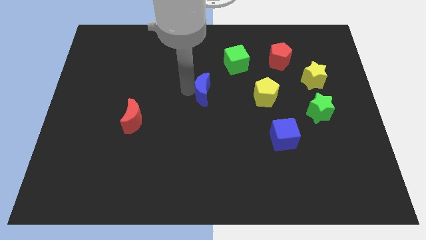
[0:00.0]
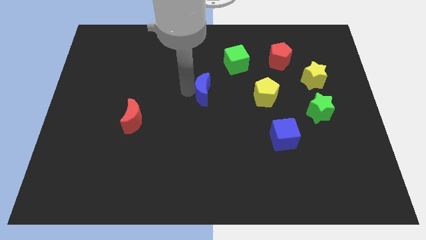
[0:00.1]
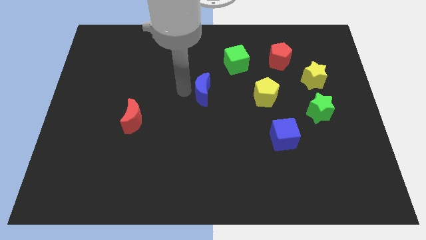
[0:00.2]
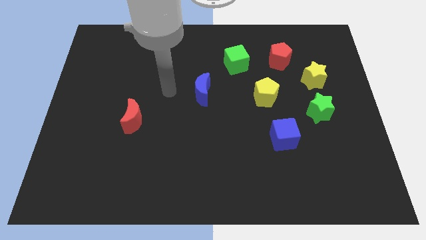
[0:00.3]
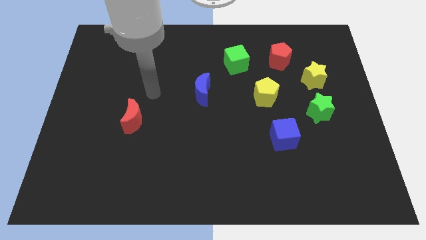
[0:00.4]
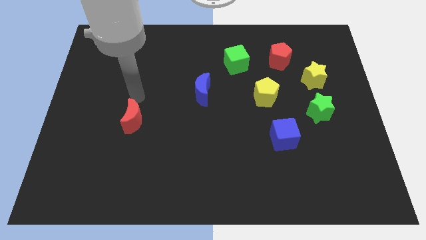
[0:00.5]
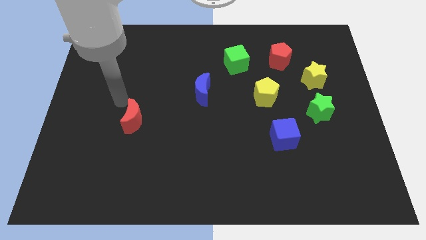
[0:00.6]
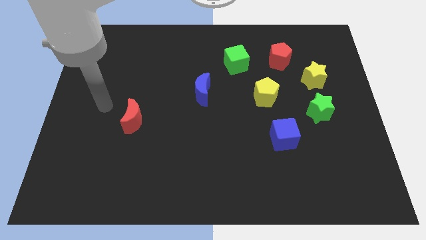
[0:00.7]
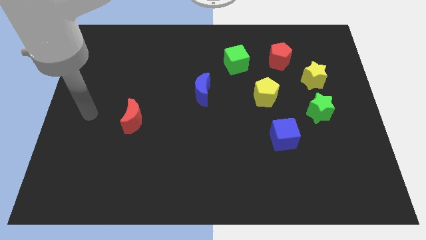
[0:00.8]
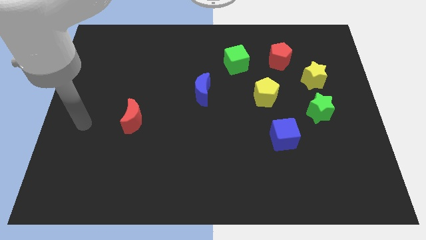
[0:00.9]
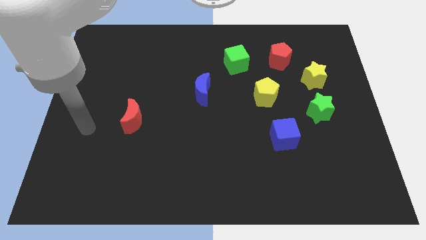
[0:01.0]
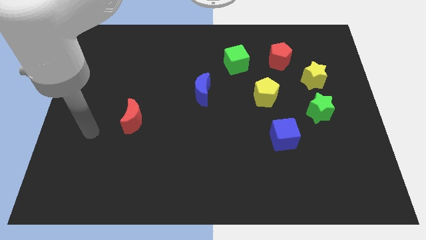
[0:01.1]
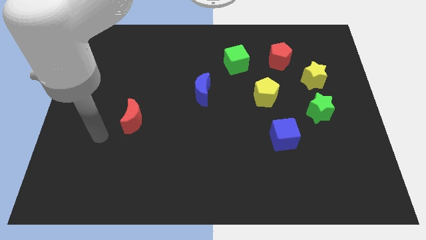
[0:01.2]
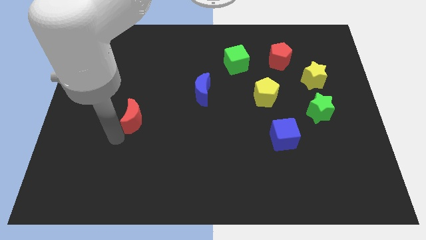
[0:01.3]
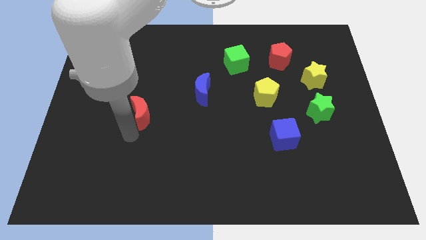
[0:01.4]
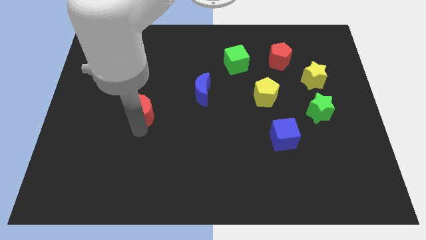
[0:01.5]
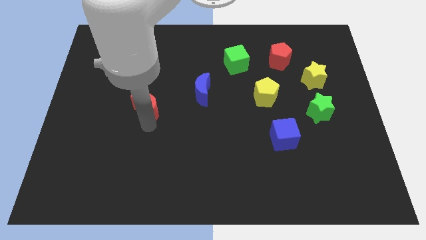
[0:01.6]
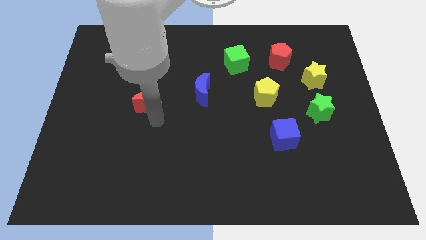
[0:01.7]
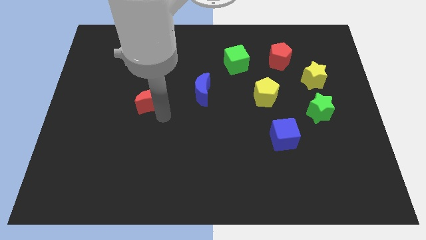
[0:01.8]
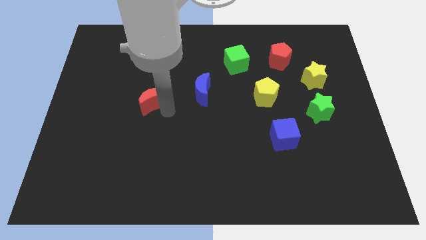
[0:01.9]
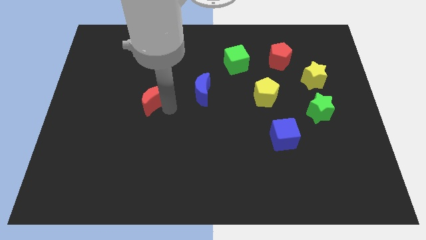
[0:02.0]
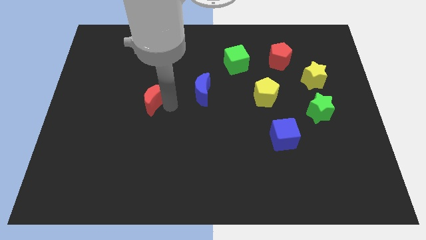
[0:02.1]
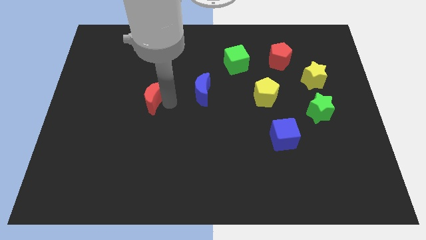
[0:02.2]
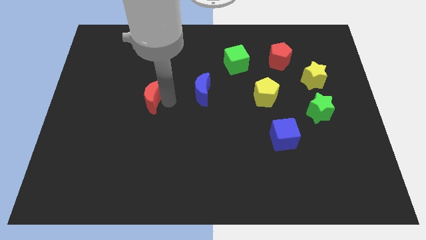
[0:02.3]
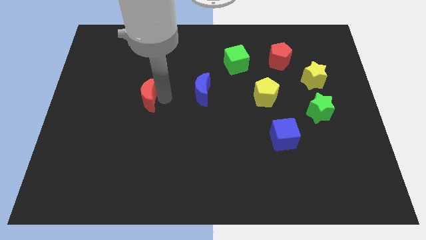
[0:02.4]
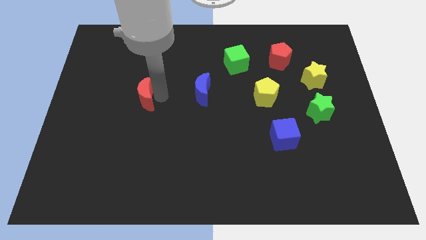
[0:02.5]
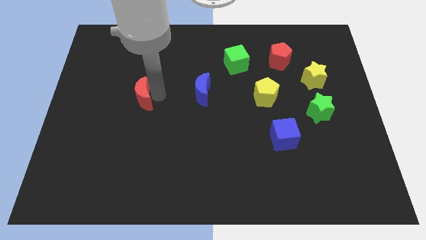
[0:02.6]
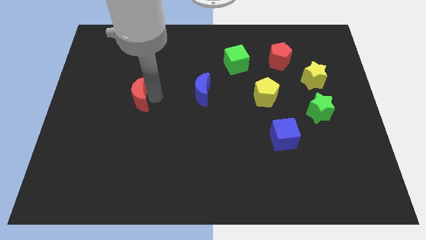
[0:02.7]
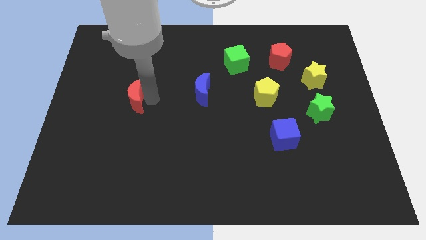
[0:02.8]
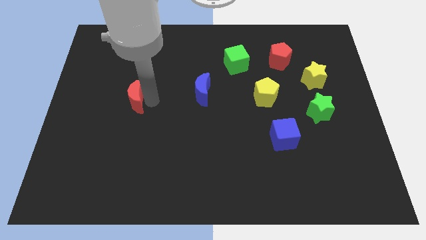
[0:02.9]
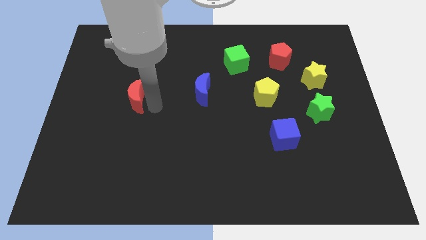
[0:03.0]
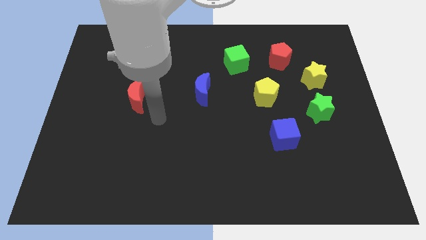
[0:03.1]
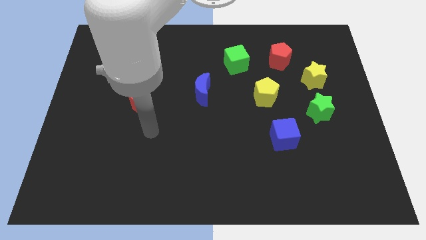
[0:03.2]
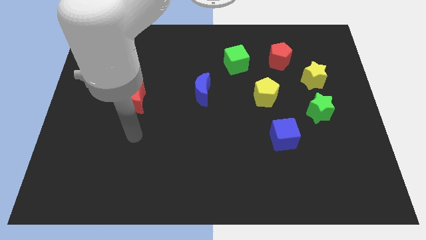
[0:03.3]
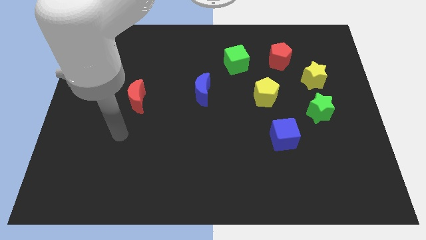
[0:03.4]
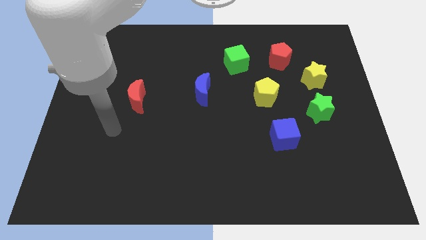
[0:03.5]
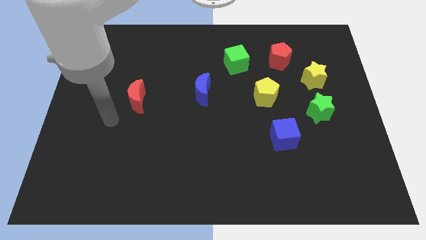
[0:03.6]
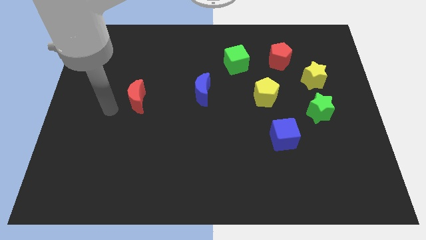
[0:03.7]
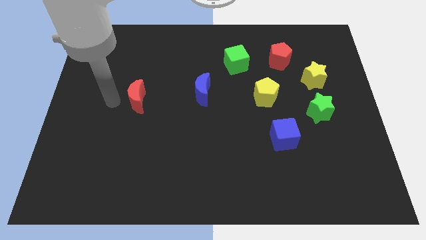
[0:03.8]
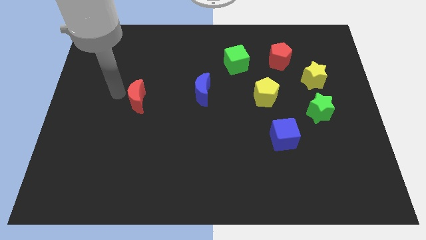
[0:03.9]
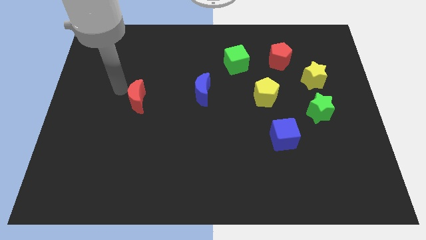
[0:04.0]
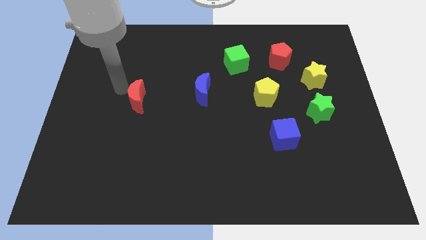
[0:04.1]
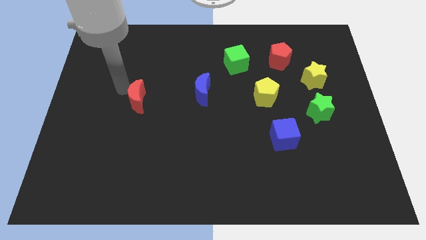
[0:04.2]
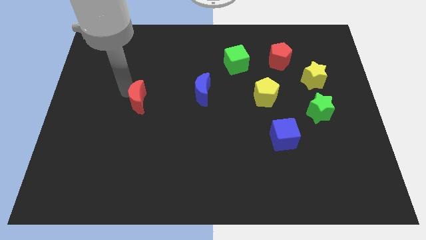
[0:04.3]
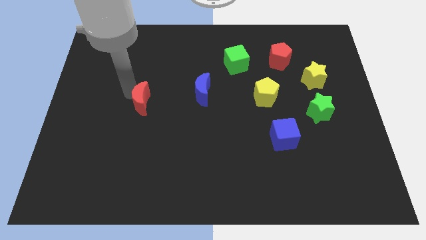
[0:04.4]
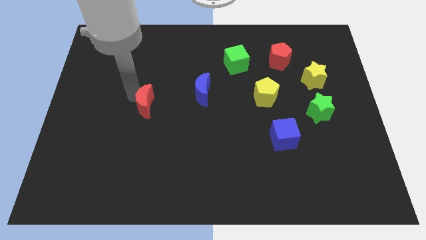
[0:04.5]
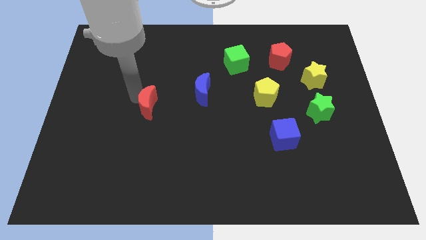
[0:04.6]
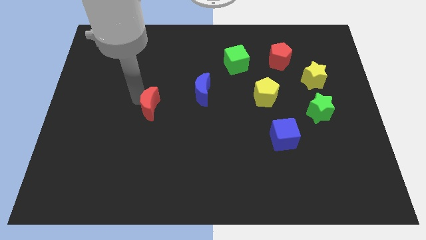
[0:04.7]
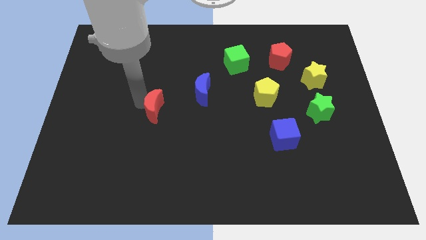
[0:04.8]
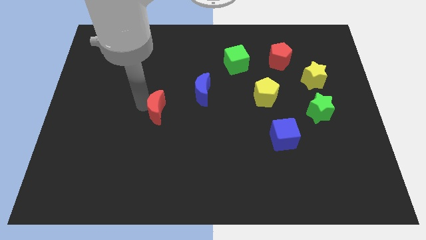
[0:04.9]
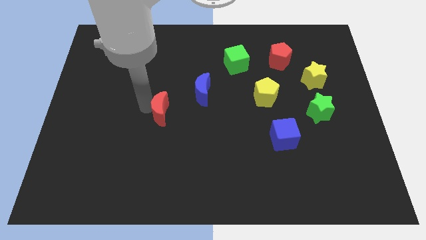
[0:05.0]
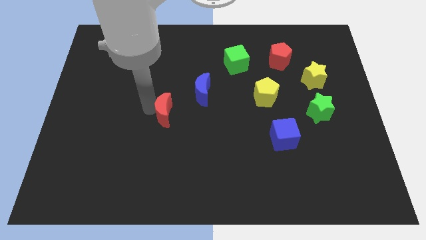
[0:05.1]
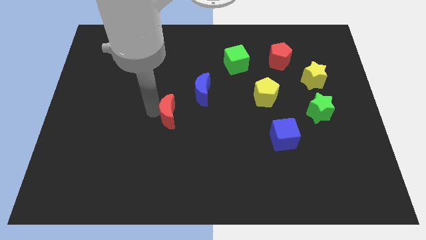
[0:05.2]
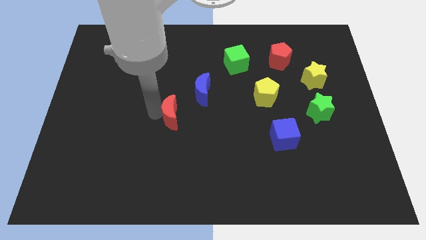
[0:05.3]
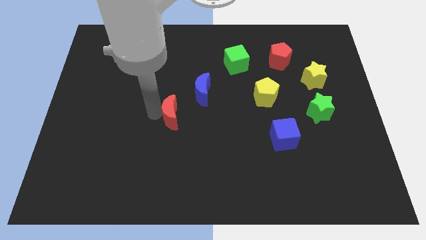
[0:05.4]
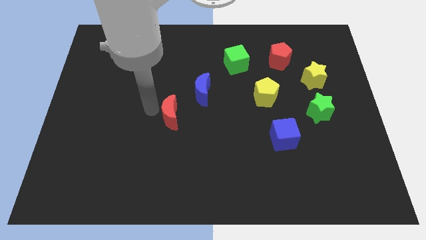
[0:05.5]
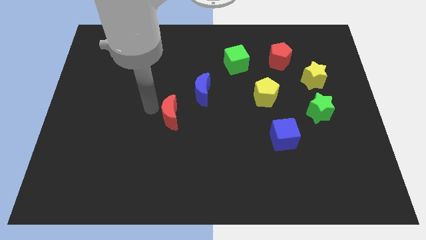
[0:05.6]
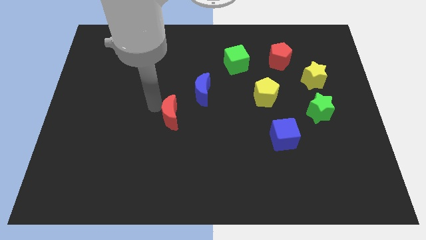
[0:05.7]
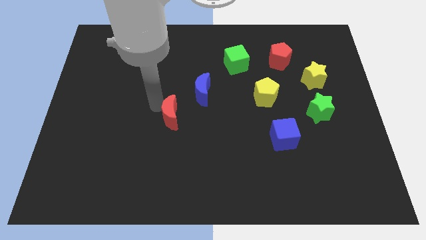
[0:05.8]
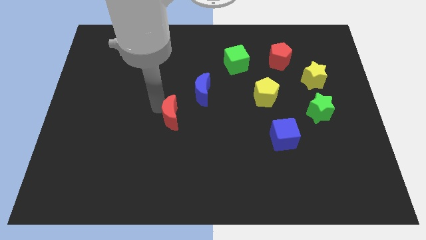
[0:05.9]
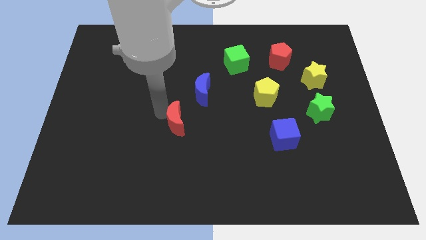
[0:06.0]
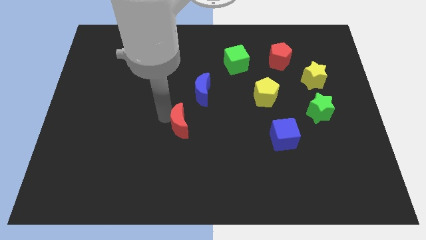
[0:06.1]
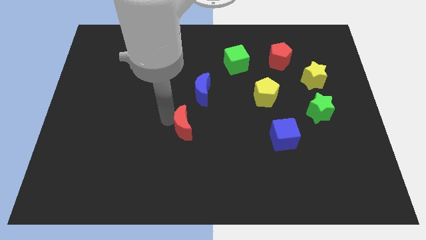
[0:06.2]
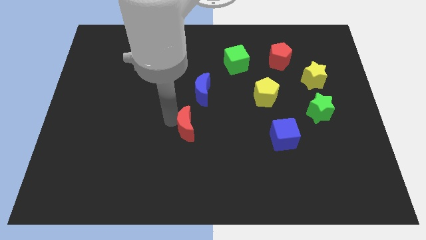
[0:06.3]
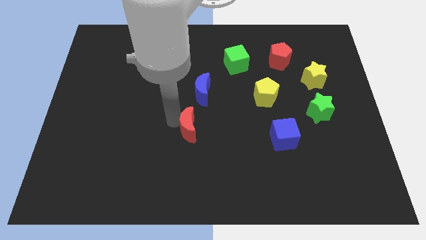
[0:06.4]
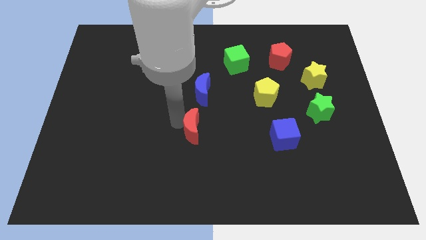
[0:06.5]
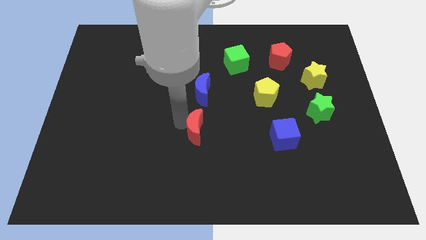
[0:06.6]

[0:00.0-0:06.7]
drag the red moon and place it below the blue moon

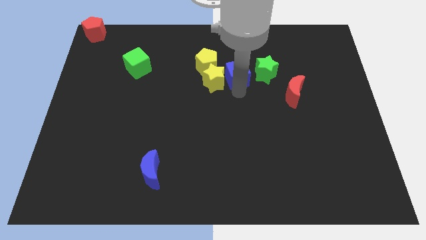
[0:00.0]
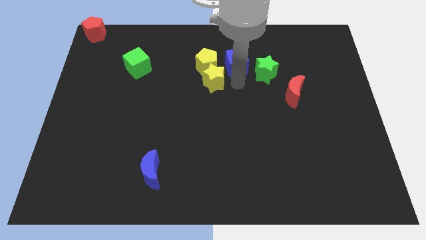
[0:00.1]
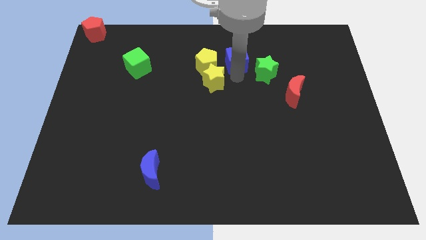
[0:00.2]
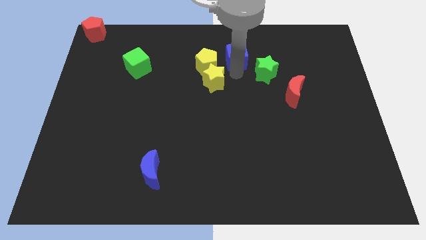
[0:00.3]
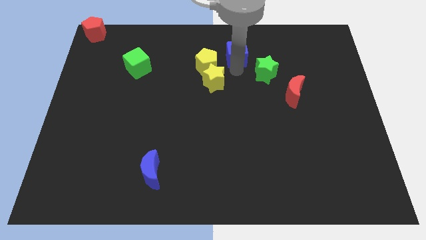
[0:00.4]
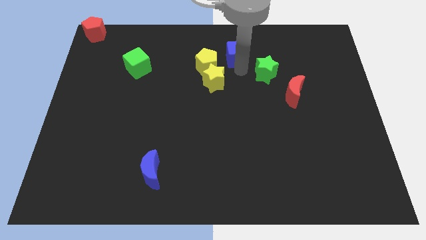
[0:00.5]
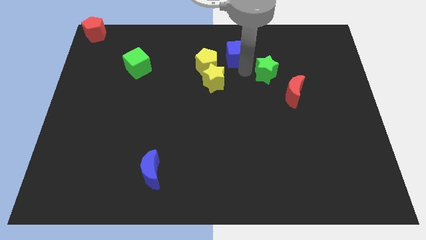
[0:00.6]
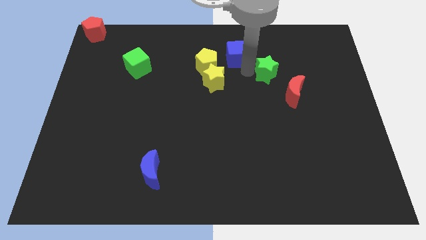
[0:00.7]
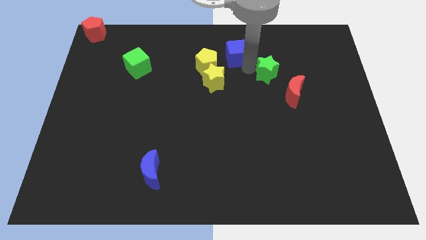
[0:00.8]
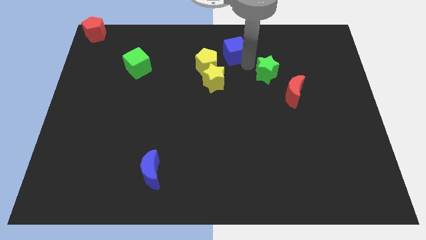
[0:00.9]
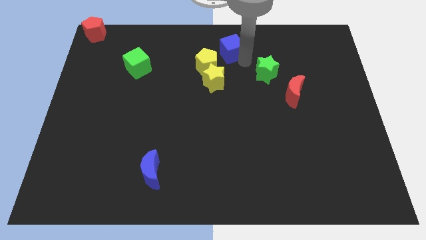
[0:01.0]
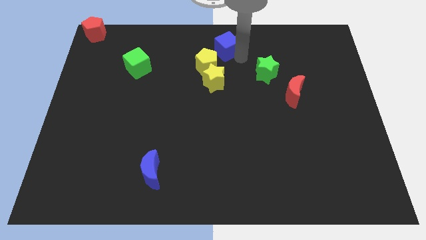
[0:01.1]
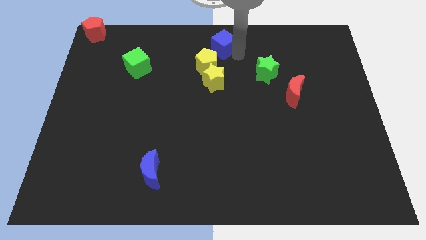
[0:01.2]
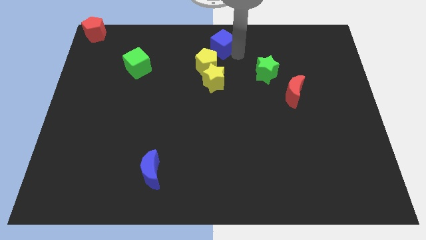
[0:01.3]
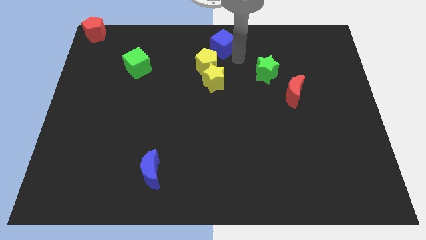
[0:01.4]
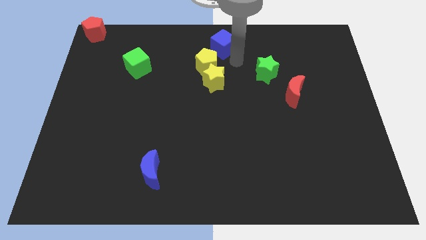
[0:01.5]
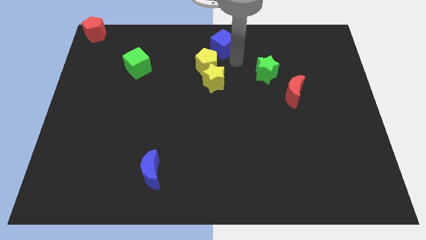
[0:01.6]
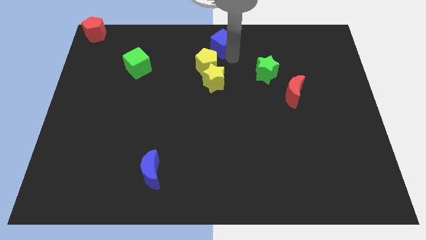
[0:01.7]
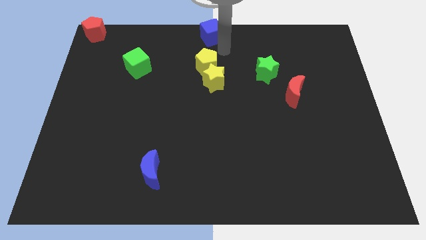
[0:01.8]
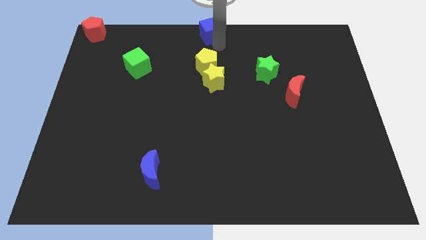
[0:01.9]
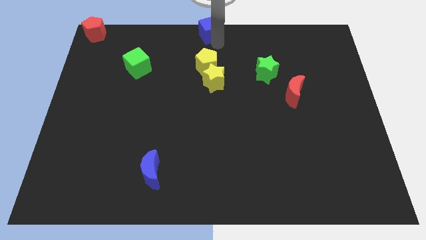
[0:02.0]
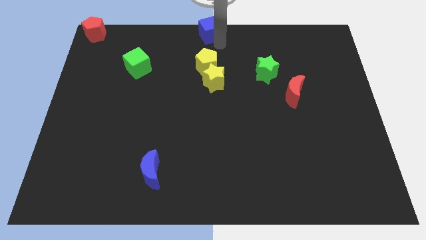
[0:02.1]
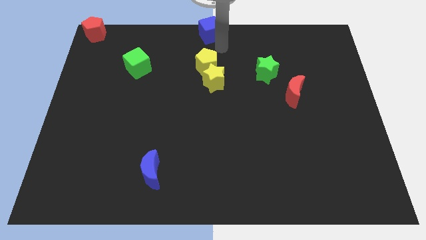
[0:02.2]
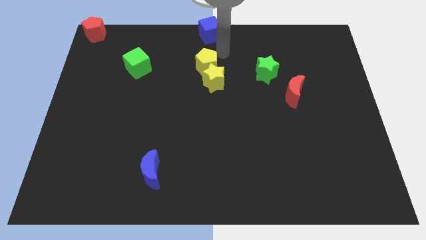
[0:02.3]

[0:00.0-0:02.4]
move the blue moon to the top center of the board
